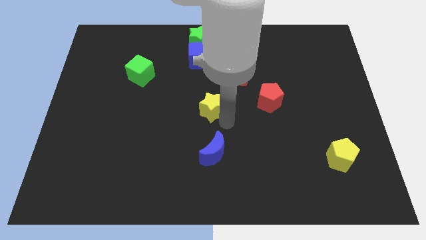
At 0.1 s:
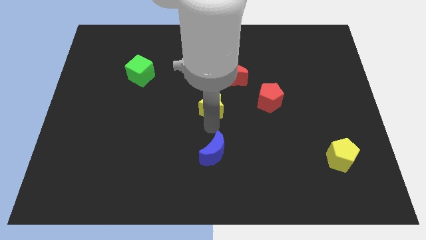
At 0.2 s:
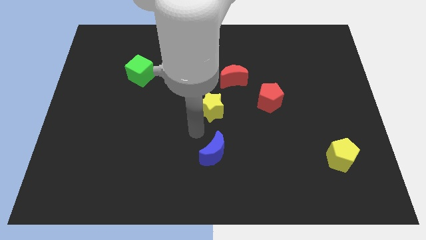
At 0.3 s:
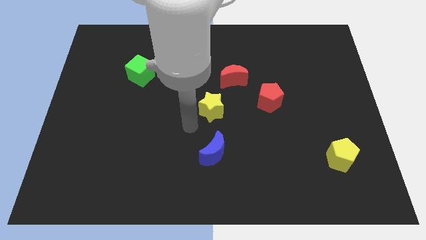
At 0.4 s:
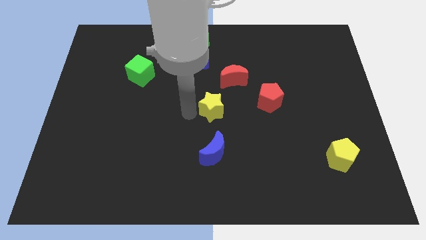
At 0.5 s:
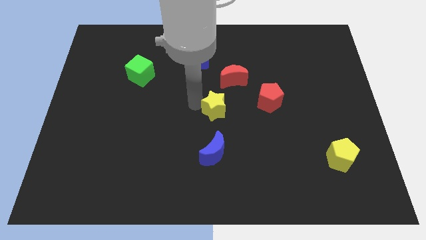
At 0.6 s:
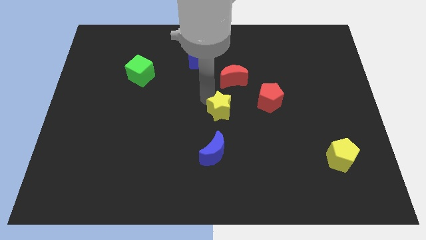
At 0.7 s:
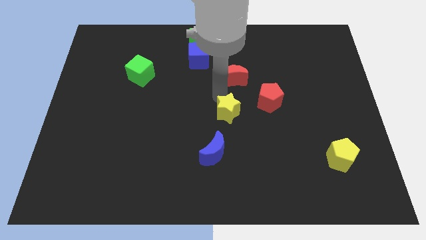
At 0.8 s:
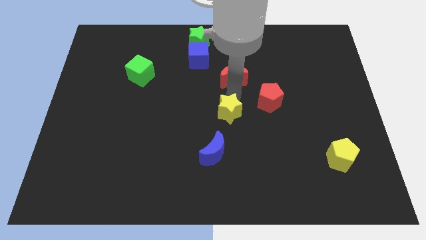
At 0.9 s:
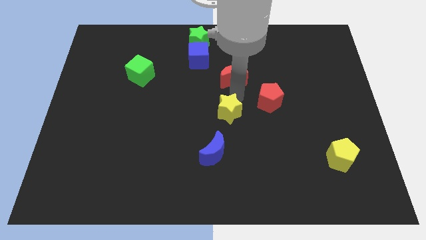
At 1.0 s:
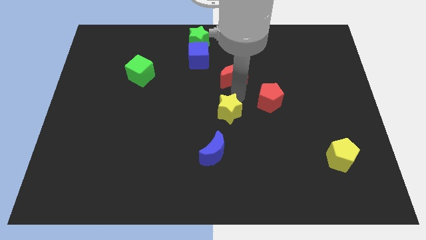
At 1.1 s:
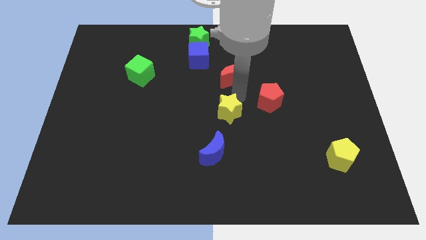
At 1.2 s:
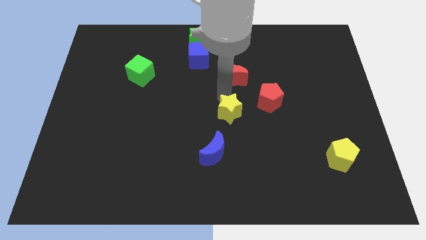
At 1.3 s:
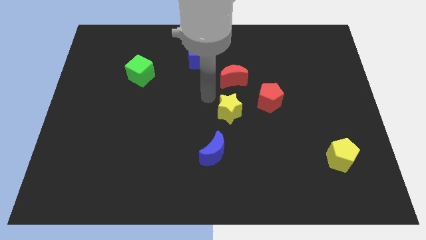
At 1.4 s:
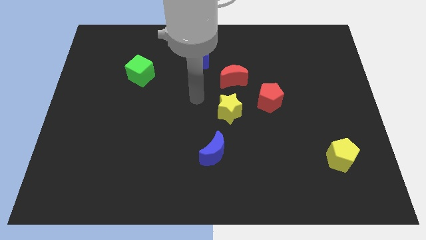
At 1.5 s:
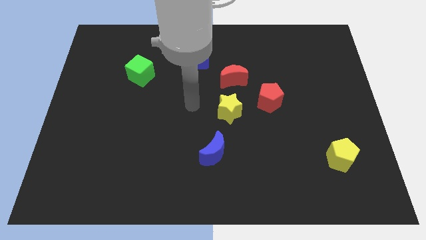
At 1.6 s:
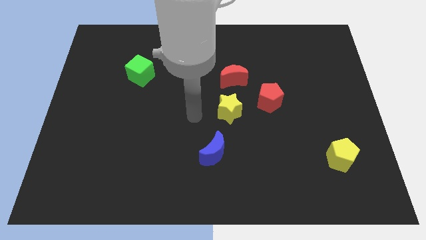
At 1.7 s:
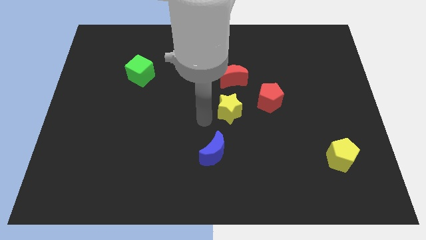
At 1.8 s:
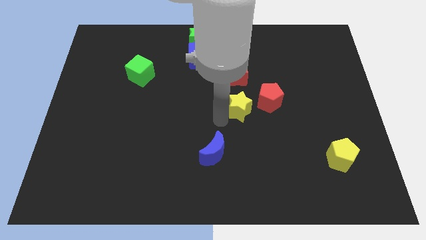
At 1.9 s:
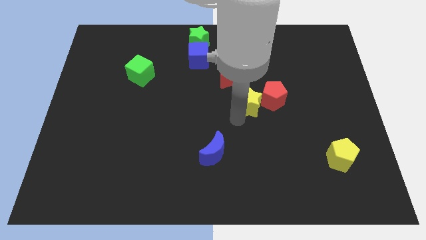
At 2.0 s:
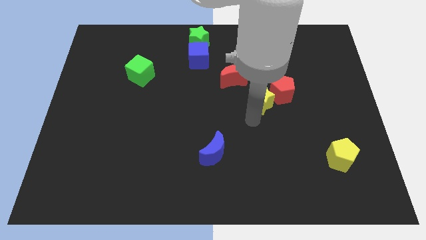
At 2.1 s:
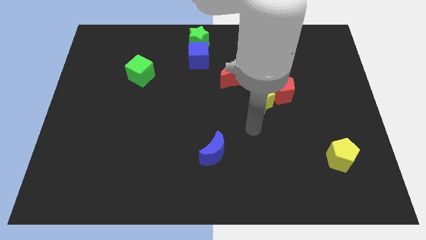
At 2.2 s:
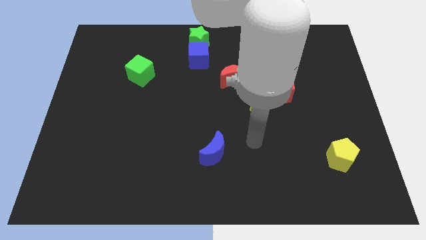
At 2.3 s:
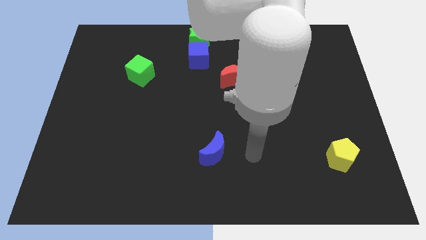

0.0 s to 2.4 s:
push yellow star in to red pentagon

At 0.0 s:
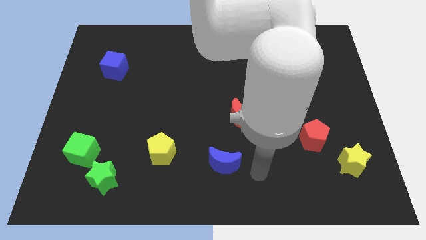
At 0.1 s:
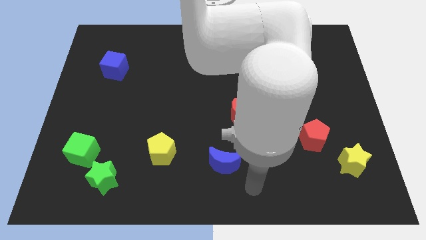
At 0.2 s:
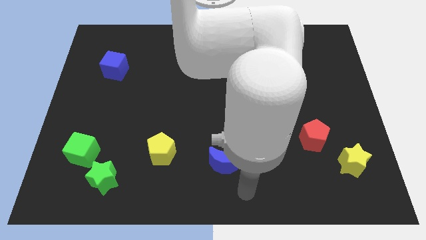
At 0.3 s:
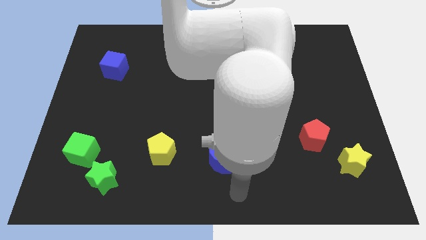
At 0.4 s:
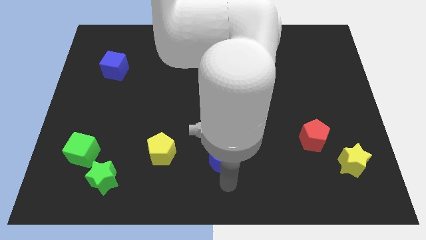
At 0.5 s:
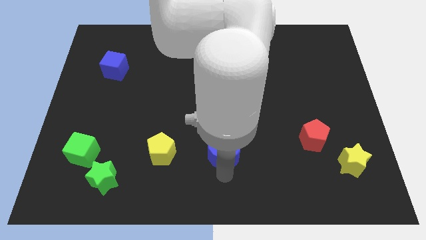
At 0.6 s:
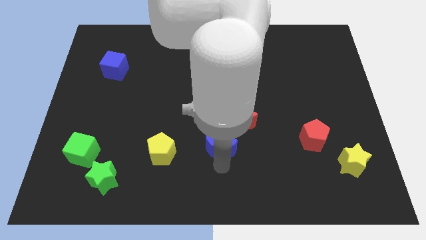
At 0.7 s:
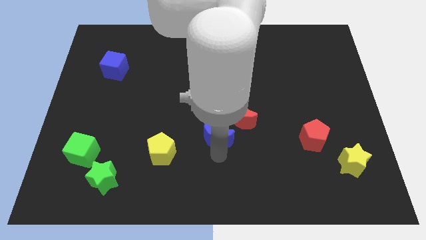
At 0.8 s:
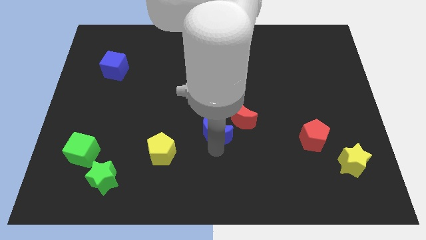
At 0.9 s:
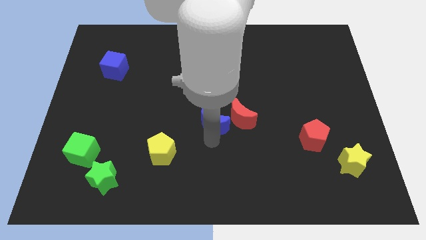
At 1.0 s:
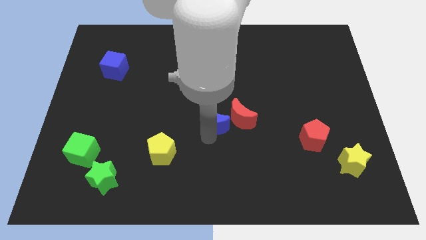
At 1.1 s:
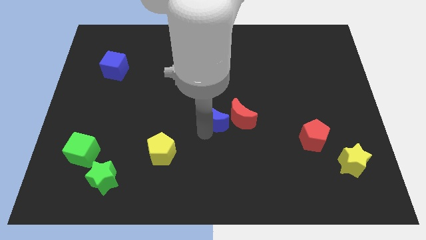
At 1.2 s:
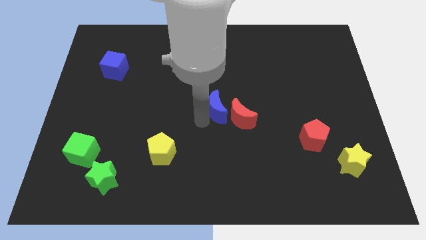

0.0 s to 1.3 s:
push the blue moon to the left of red moon

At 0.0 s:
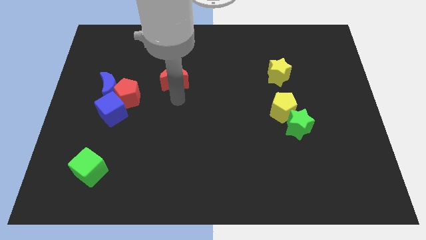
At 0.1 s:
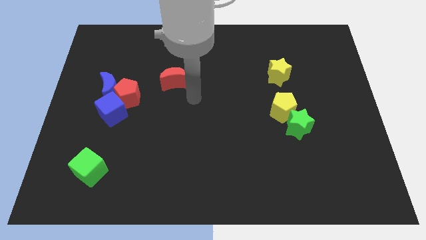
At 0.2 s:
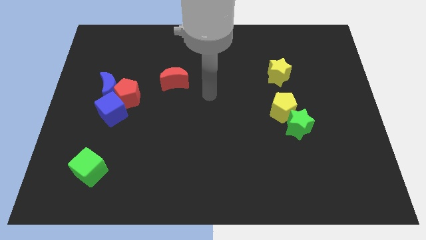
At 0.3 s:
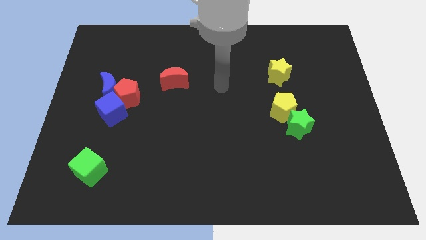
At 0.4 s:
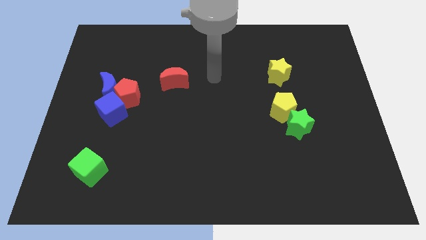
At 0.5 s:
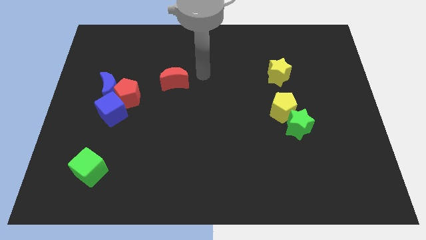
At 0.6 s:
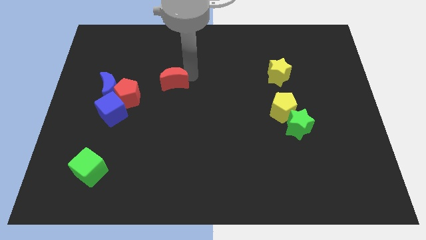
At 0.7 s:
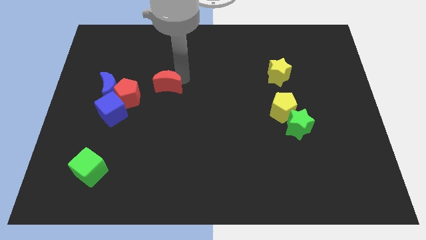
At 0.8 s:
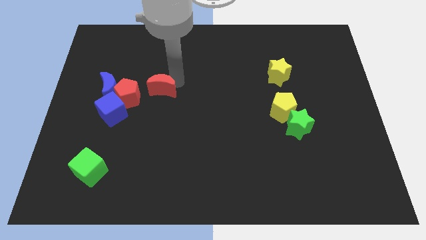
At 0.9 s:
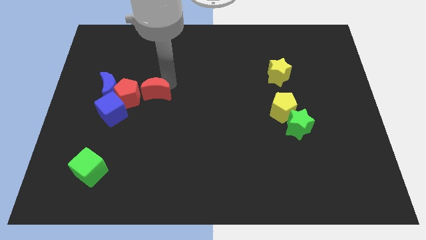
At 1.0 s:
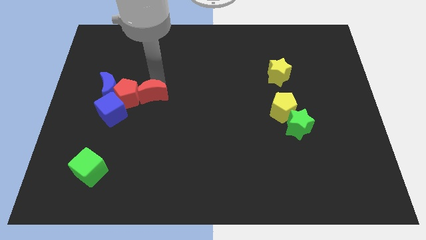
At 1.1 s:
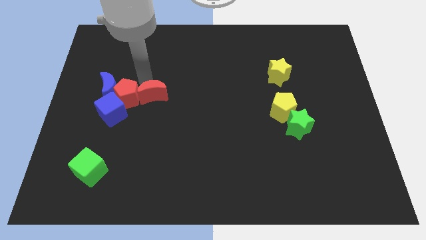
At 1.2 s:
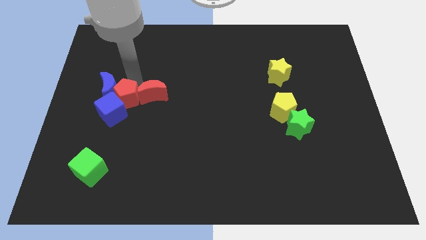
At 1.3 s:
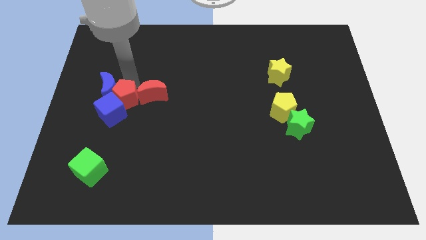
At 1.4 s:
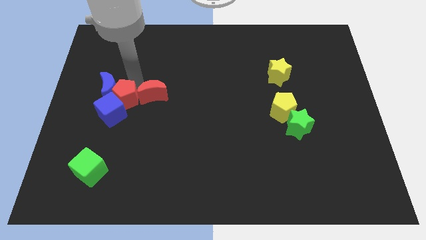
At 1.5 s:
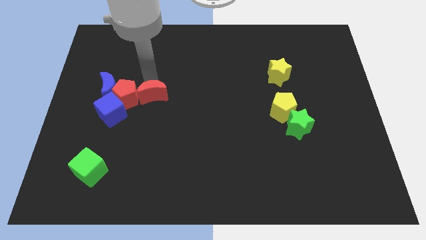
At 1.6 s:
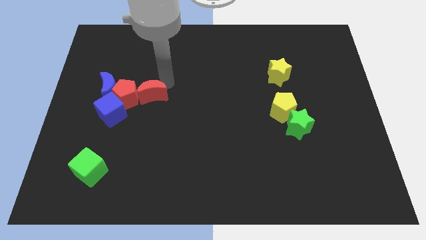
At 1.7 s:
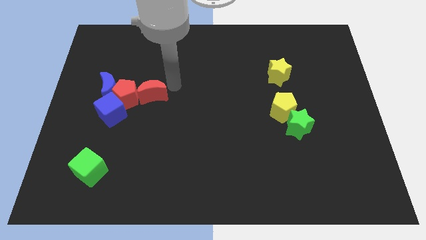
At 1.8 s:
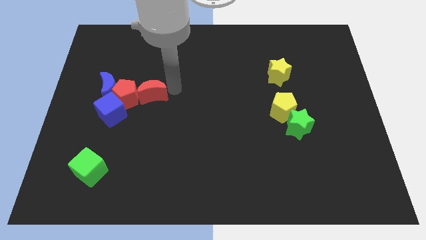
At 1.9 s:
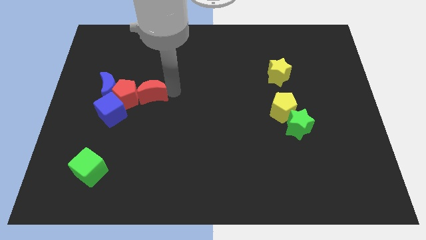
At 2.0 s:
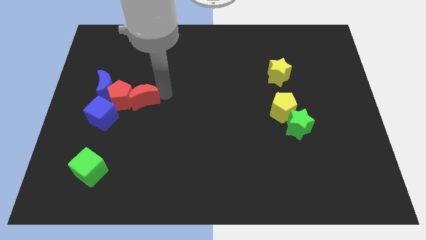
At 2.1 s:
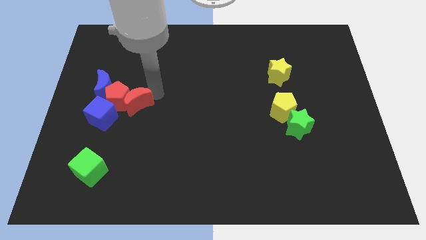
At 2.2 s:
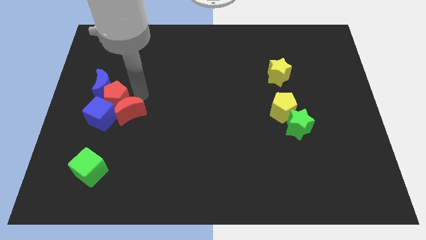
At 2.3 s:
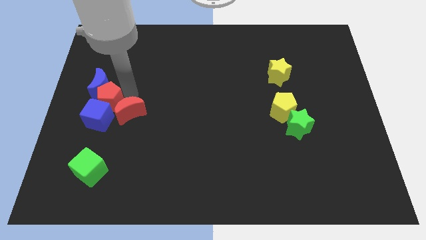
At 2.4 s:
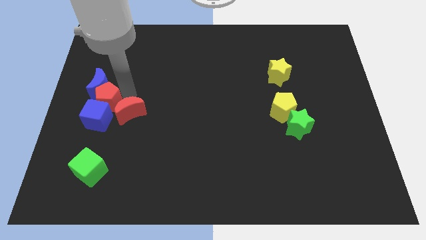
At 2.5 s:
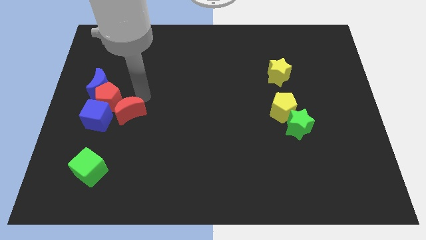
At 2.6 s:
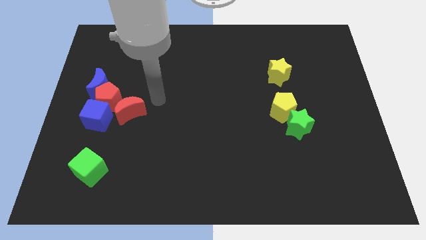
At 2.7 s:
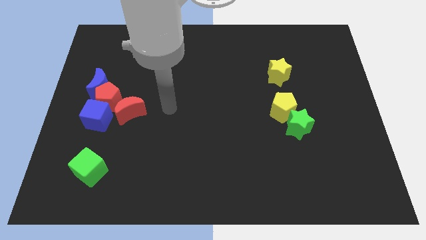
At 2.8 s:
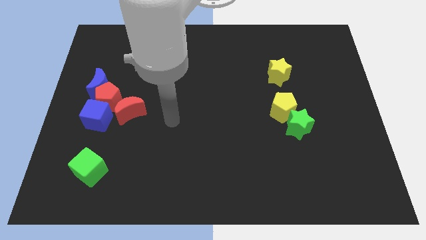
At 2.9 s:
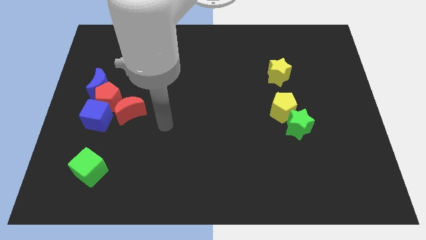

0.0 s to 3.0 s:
push red moon into red pentagon

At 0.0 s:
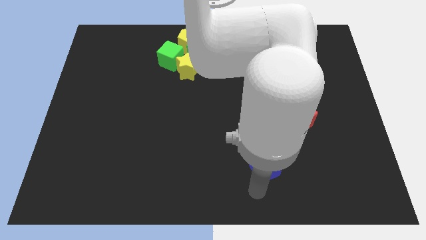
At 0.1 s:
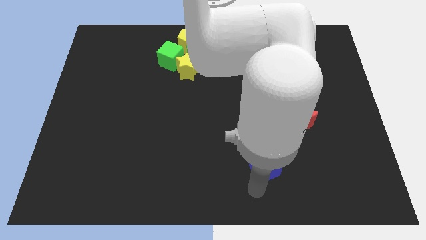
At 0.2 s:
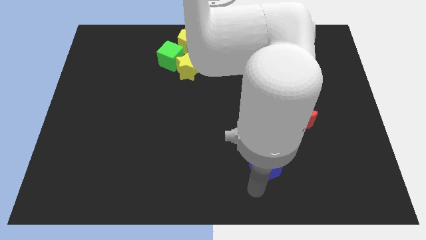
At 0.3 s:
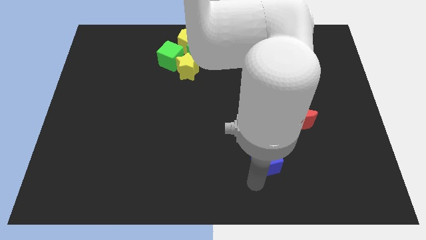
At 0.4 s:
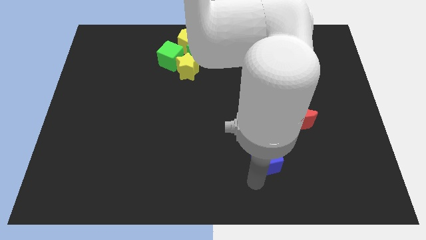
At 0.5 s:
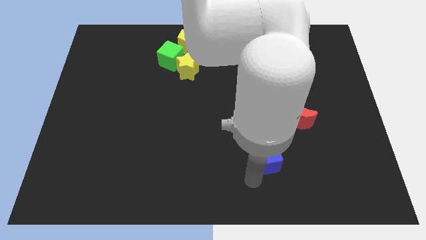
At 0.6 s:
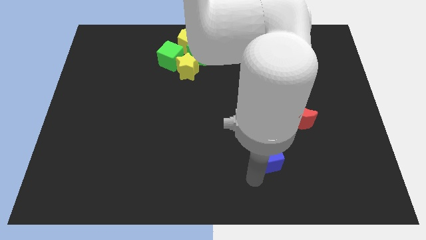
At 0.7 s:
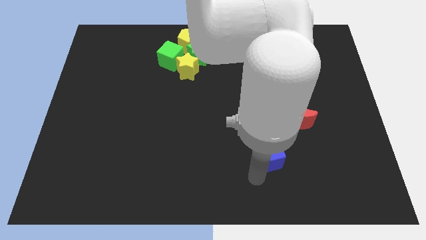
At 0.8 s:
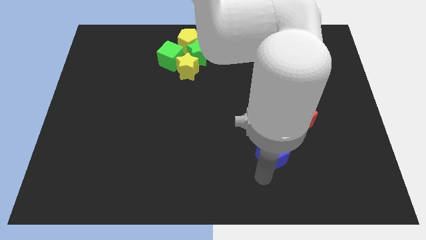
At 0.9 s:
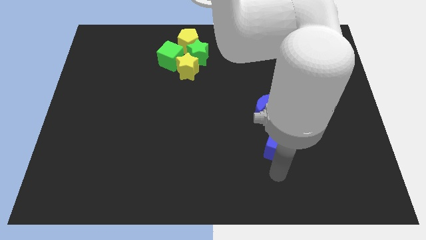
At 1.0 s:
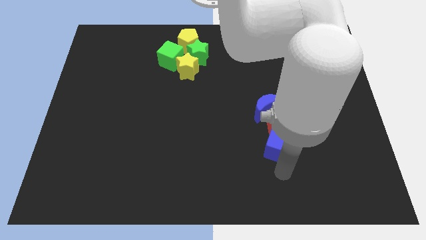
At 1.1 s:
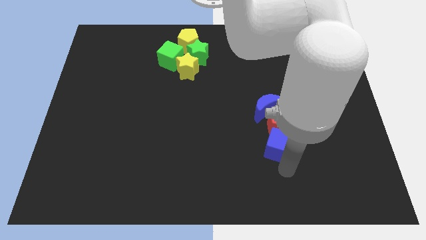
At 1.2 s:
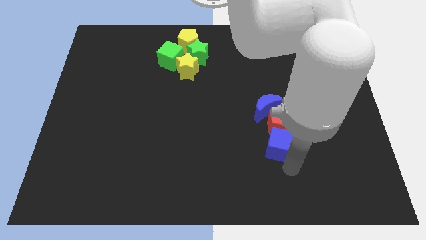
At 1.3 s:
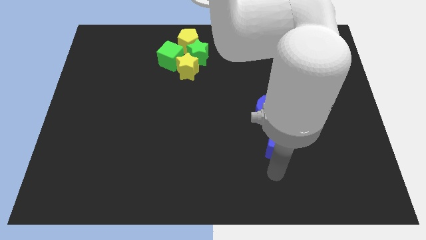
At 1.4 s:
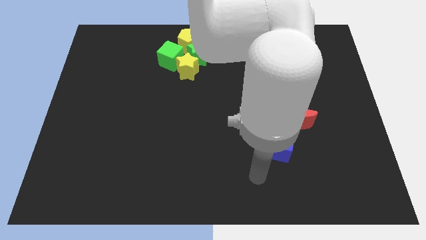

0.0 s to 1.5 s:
place blue cube below red pentagon

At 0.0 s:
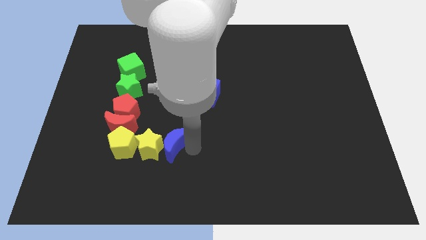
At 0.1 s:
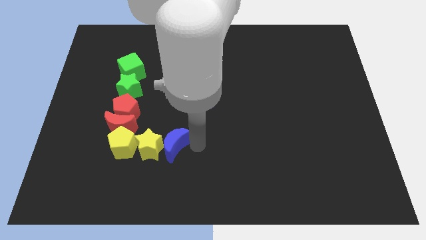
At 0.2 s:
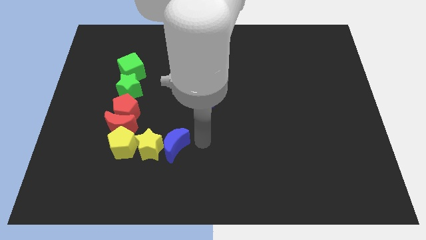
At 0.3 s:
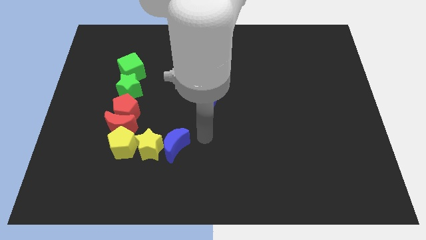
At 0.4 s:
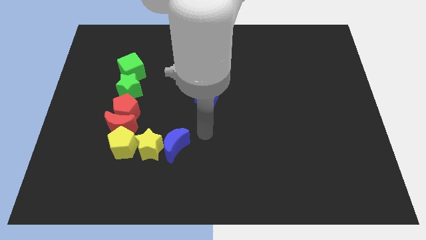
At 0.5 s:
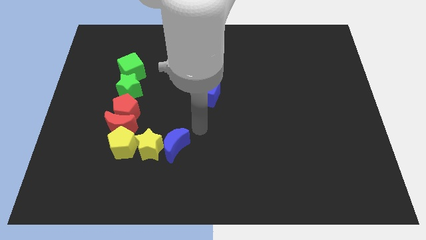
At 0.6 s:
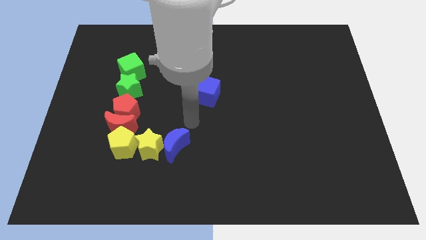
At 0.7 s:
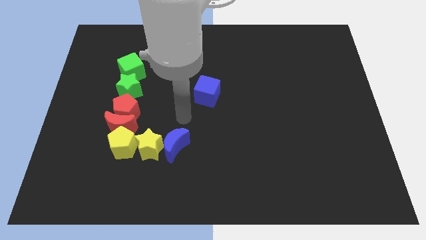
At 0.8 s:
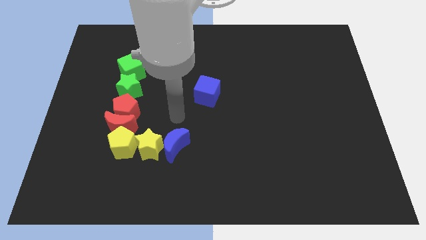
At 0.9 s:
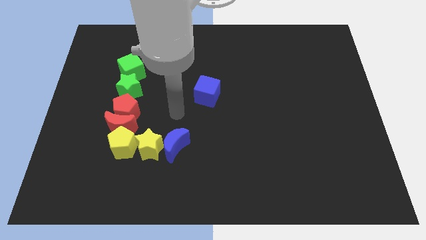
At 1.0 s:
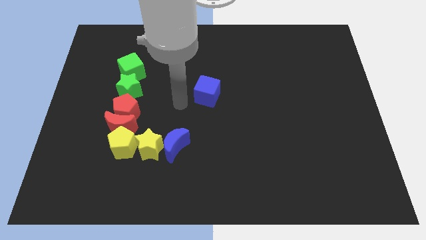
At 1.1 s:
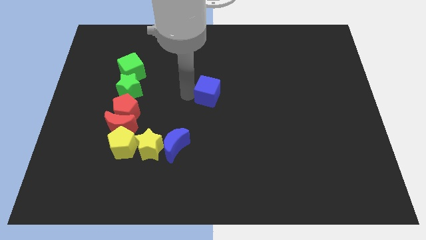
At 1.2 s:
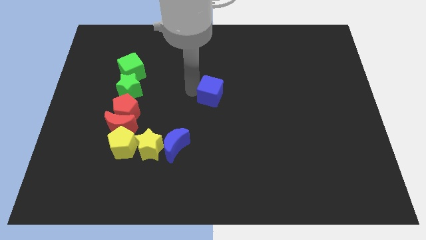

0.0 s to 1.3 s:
move your arm away from the blue moon
